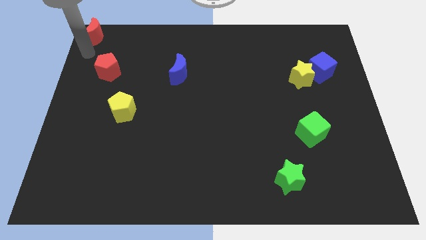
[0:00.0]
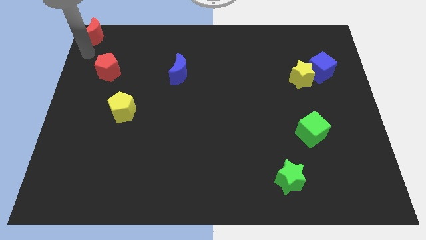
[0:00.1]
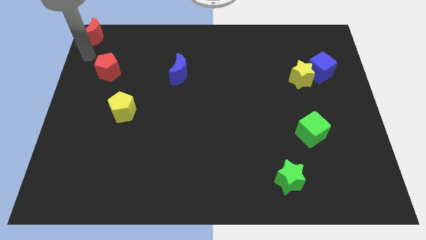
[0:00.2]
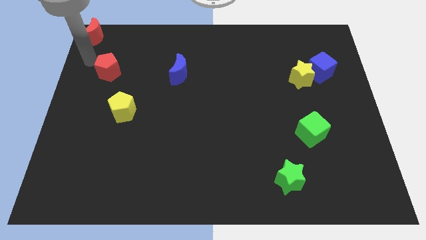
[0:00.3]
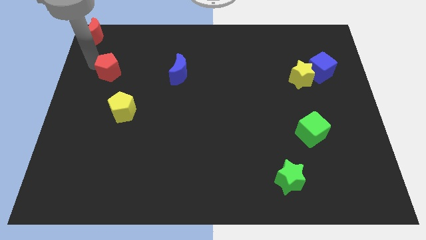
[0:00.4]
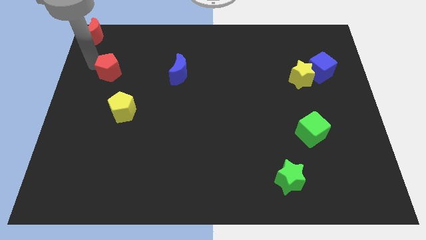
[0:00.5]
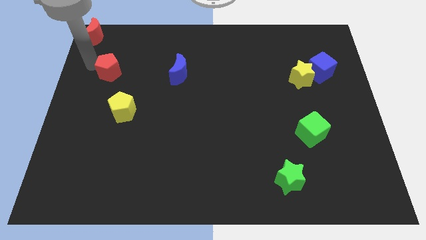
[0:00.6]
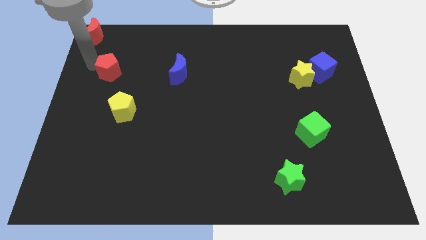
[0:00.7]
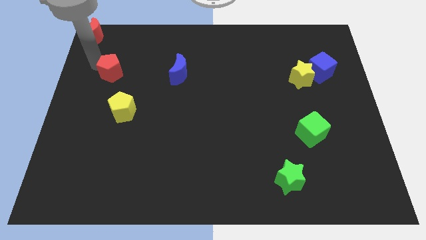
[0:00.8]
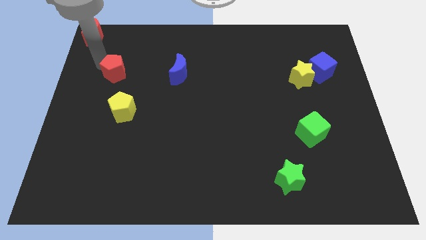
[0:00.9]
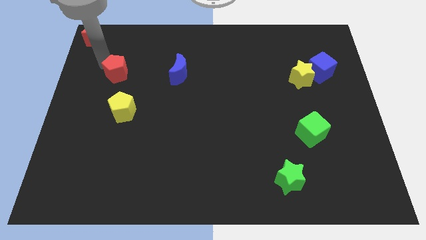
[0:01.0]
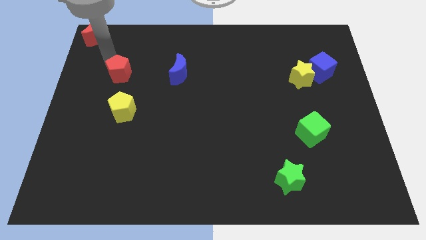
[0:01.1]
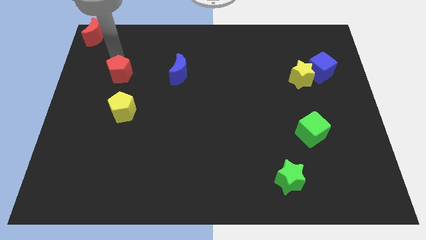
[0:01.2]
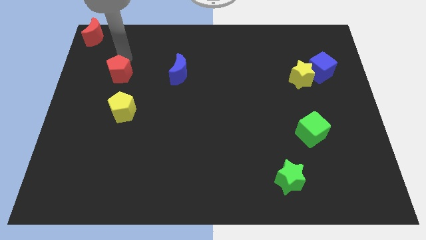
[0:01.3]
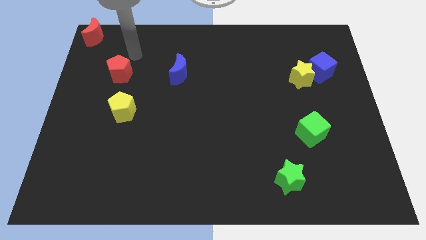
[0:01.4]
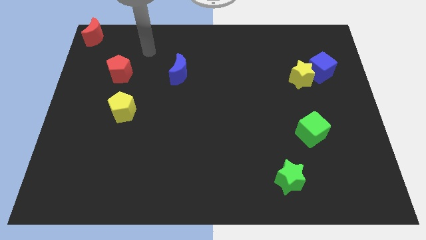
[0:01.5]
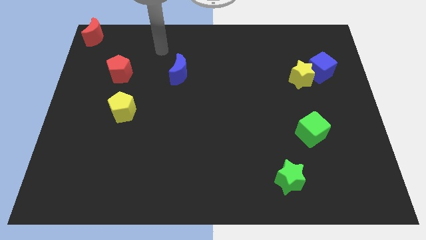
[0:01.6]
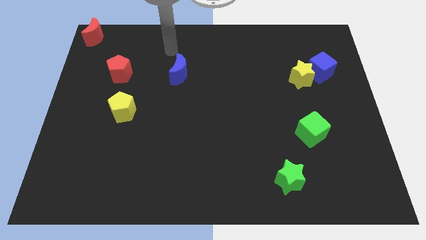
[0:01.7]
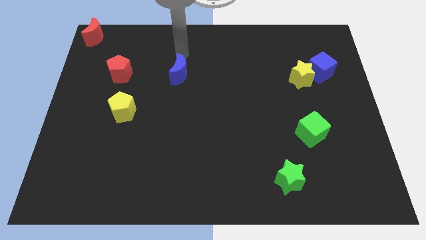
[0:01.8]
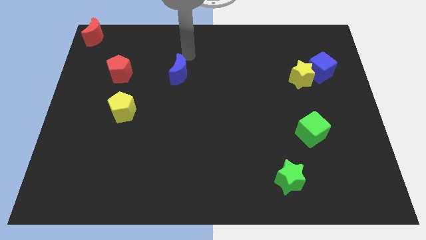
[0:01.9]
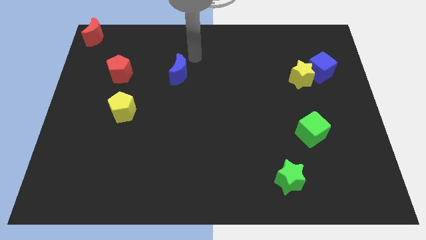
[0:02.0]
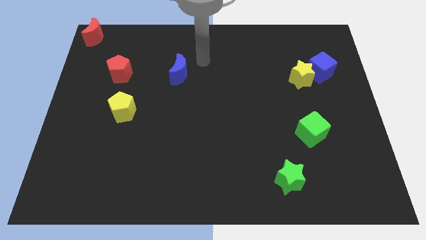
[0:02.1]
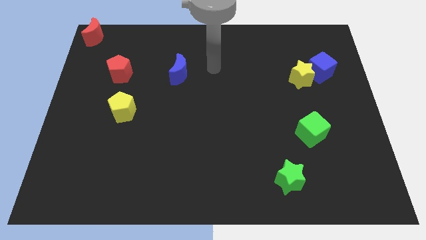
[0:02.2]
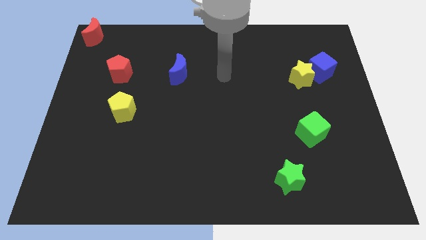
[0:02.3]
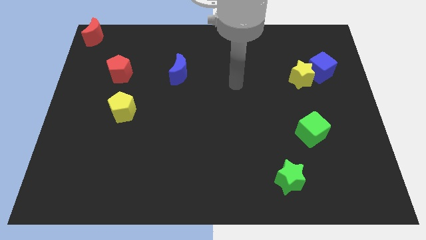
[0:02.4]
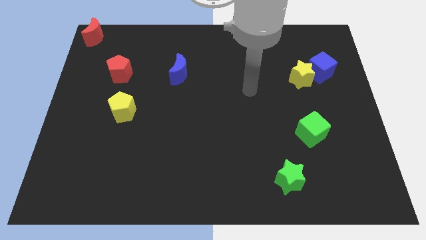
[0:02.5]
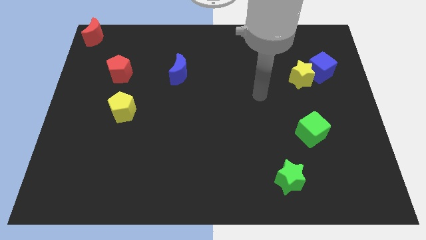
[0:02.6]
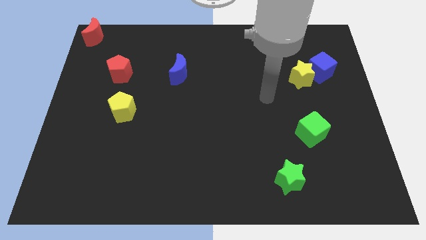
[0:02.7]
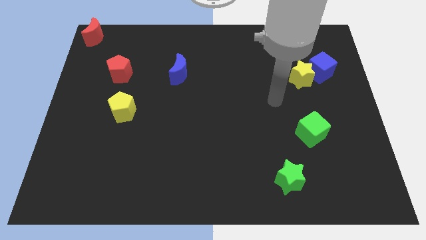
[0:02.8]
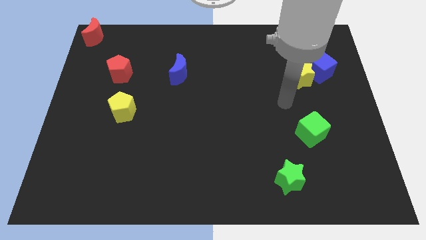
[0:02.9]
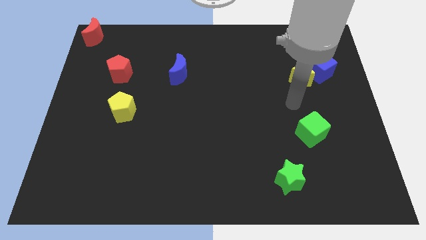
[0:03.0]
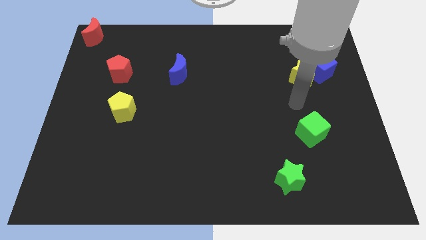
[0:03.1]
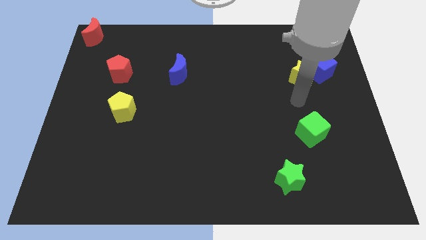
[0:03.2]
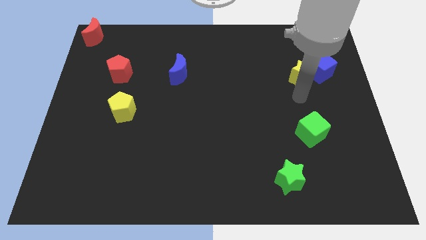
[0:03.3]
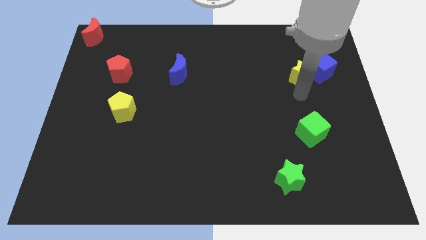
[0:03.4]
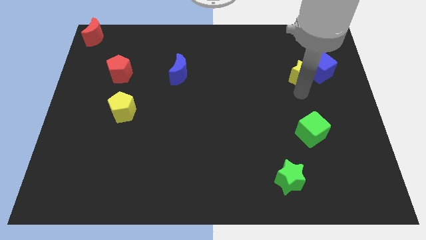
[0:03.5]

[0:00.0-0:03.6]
move the red pentagon to the top side of the yellow pentagon

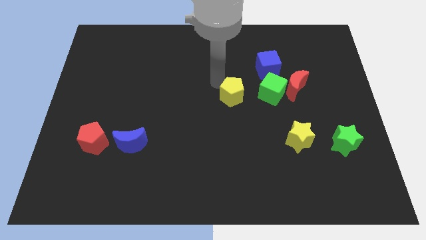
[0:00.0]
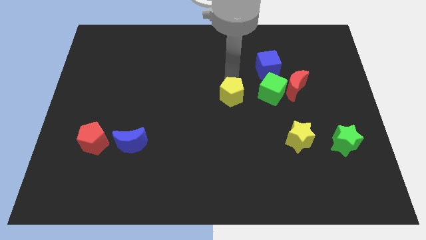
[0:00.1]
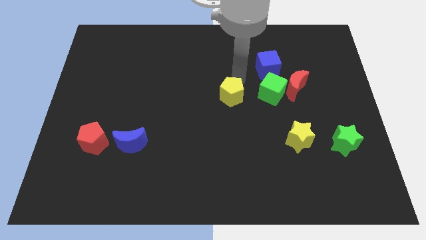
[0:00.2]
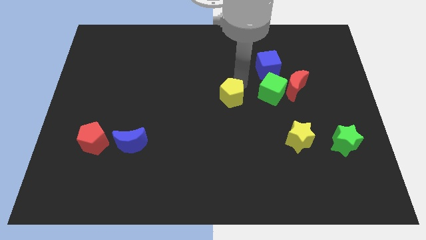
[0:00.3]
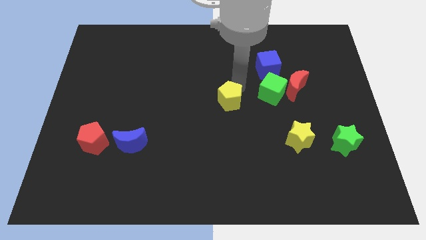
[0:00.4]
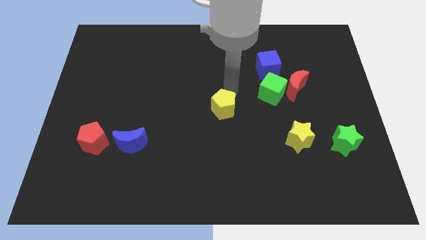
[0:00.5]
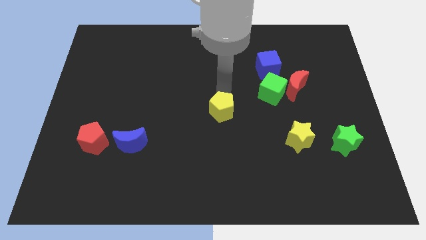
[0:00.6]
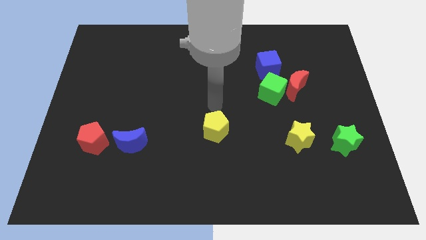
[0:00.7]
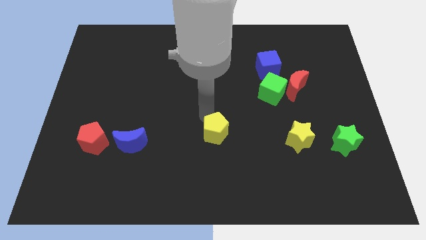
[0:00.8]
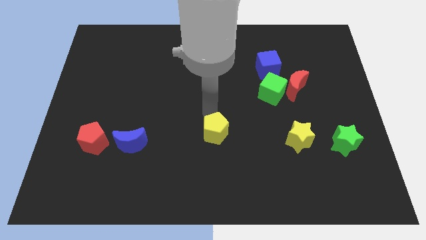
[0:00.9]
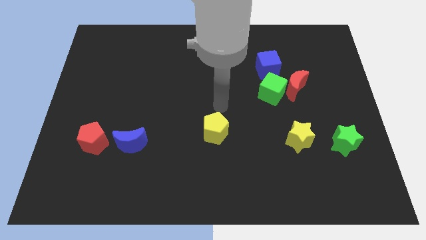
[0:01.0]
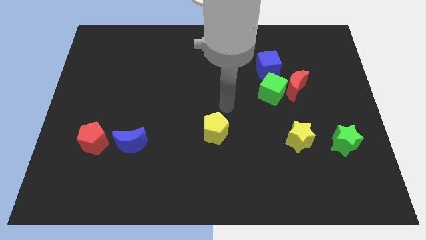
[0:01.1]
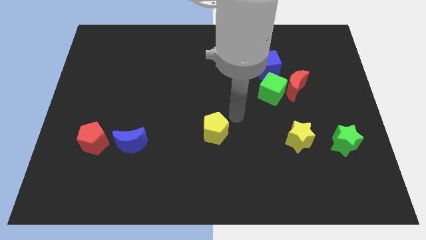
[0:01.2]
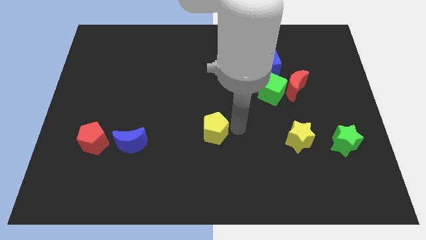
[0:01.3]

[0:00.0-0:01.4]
move the yellow pentagon slightly towards down

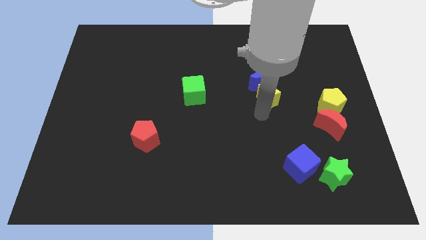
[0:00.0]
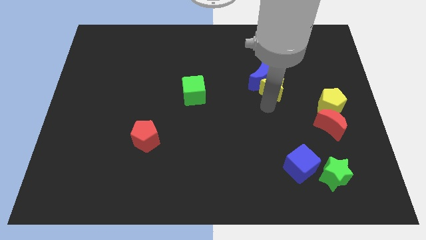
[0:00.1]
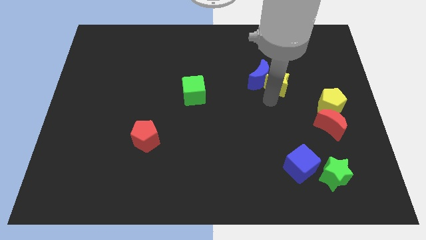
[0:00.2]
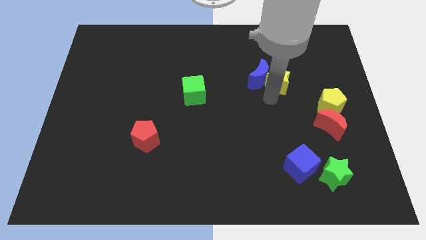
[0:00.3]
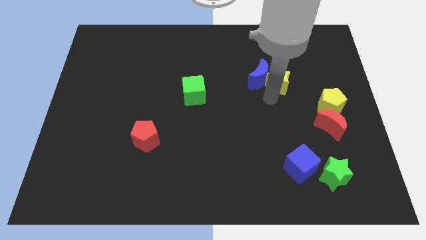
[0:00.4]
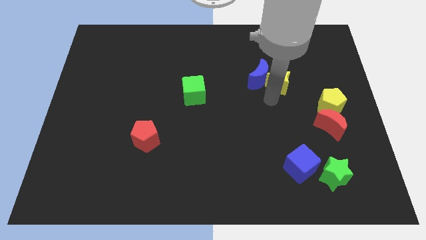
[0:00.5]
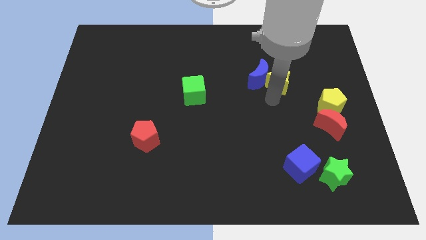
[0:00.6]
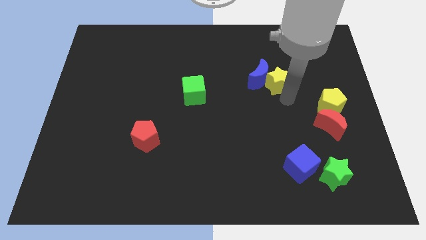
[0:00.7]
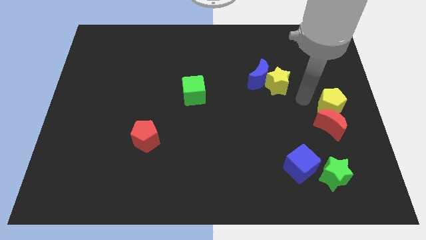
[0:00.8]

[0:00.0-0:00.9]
push the yellow star into the blue crescent

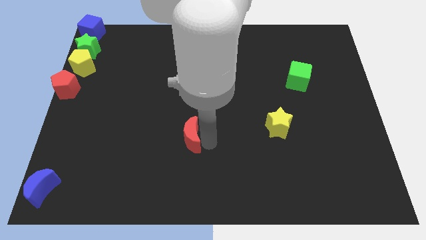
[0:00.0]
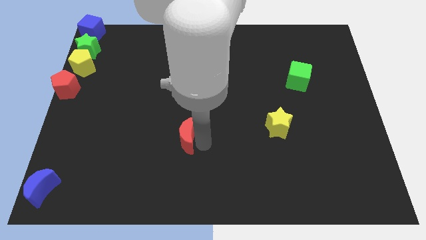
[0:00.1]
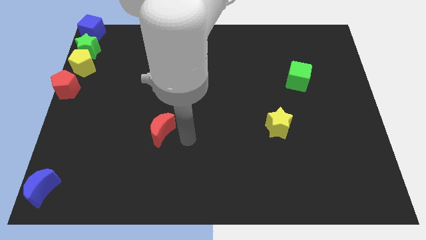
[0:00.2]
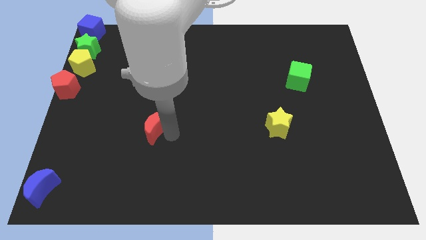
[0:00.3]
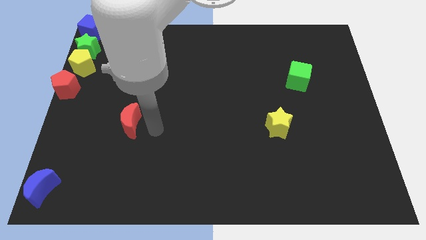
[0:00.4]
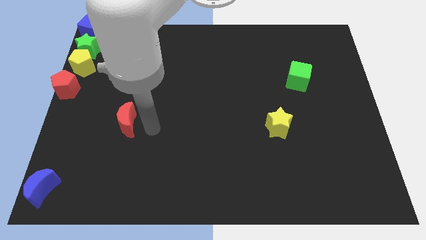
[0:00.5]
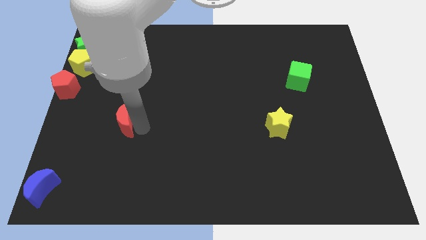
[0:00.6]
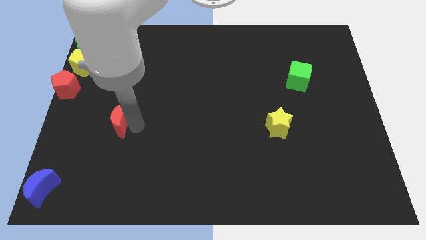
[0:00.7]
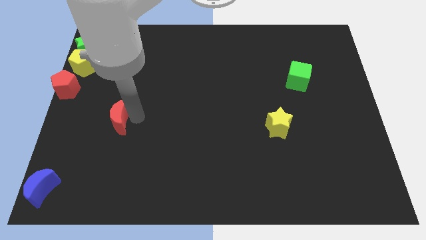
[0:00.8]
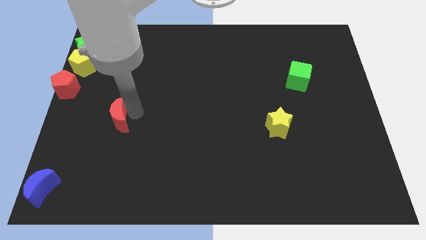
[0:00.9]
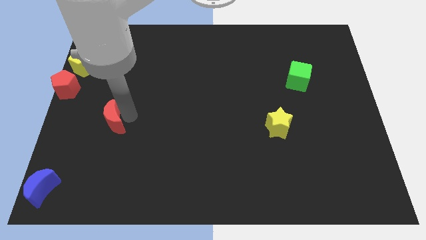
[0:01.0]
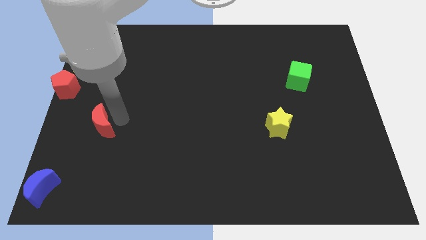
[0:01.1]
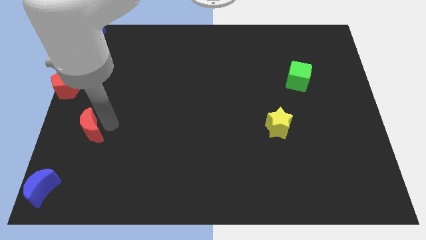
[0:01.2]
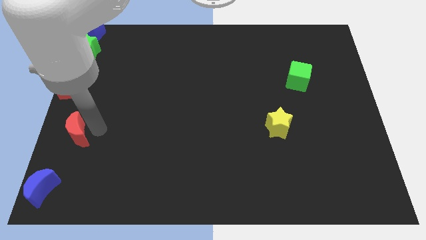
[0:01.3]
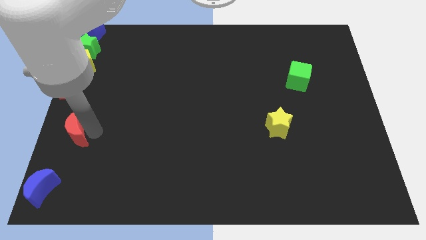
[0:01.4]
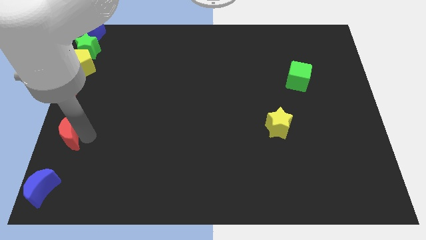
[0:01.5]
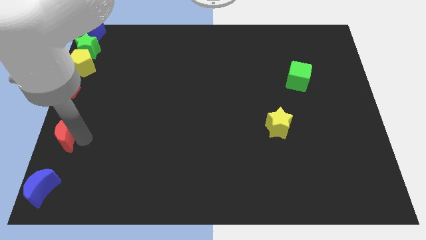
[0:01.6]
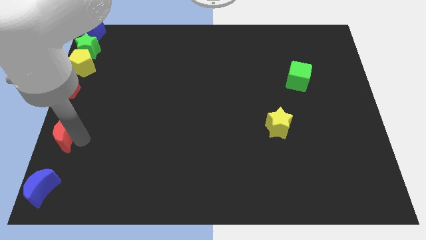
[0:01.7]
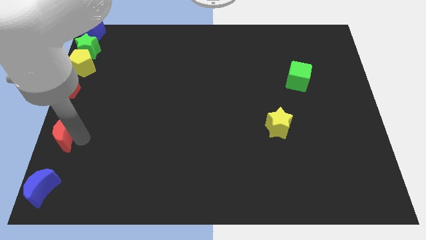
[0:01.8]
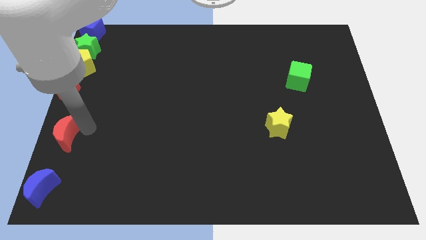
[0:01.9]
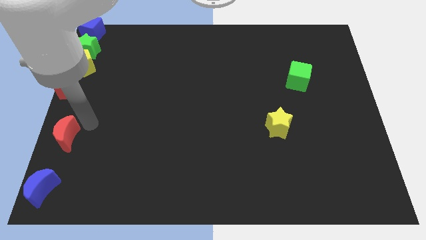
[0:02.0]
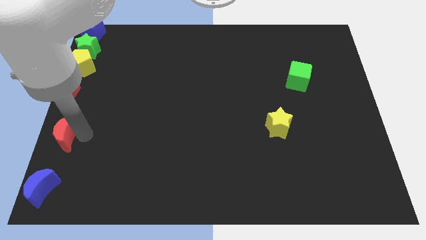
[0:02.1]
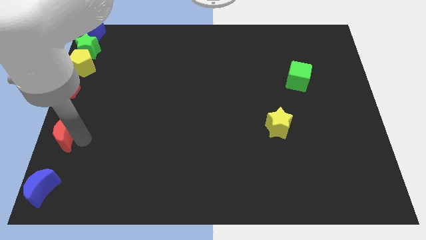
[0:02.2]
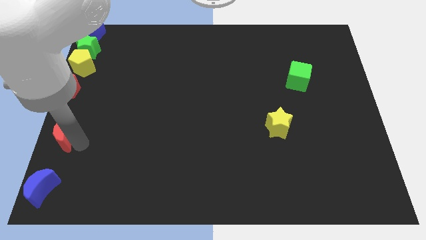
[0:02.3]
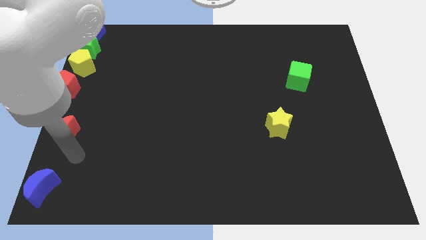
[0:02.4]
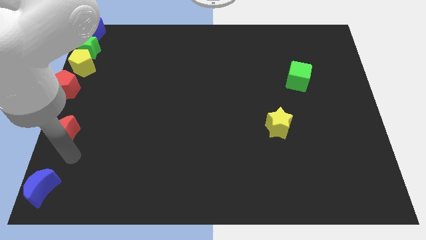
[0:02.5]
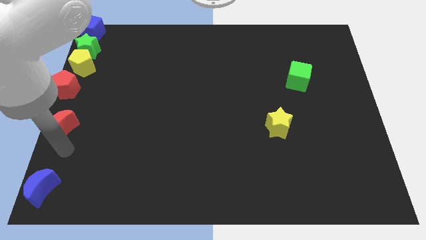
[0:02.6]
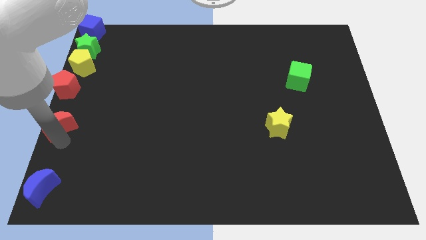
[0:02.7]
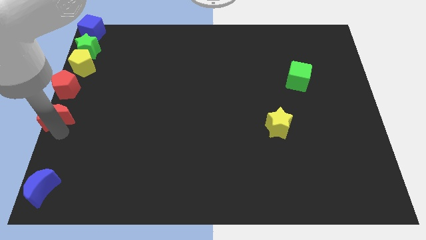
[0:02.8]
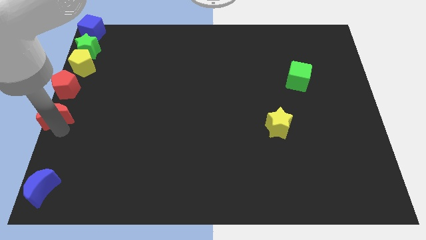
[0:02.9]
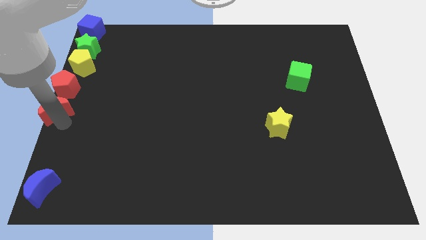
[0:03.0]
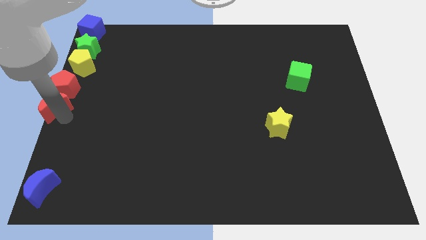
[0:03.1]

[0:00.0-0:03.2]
move red moon below the red pentagon
